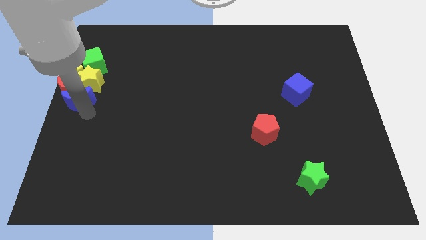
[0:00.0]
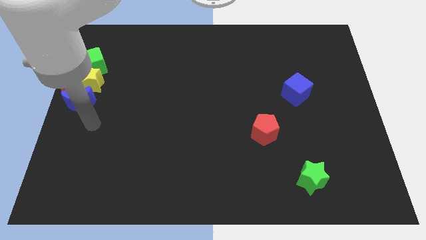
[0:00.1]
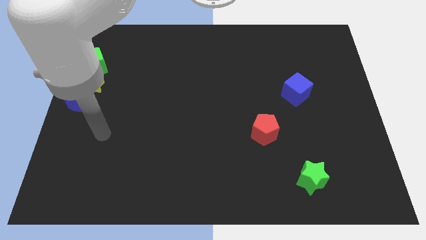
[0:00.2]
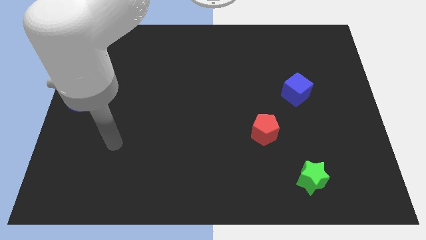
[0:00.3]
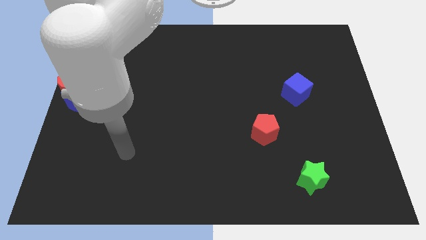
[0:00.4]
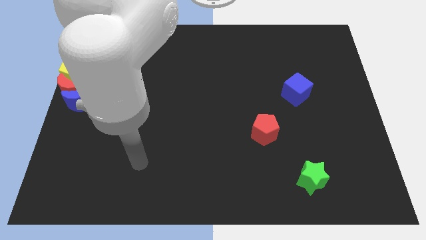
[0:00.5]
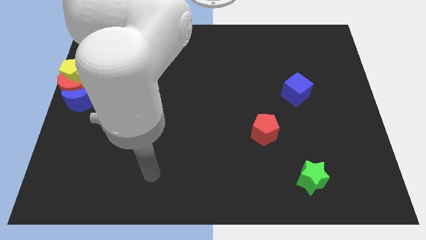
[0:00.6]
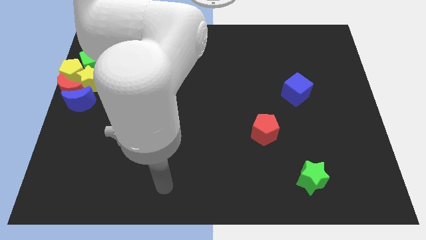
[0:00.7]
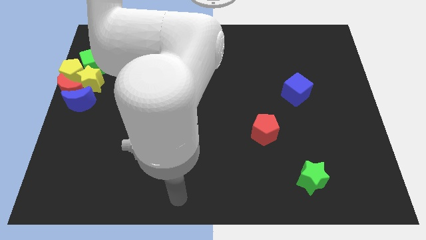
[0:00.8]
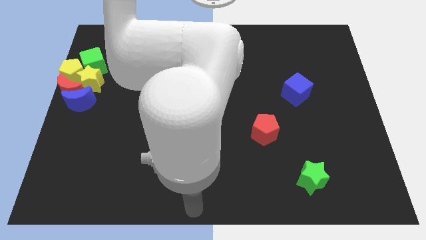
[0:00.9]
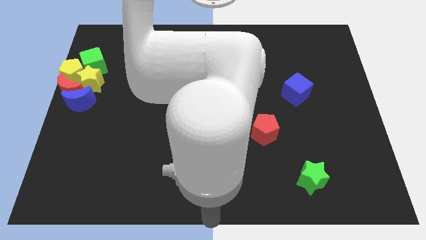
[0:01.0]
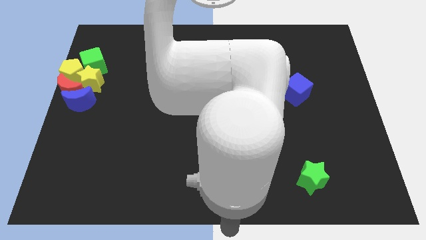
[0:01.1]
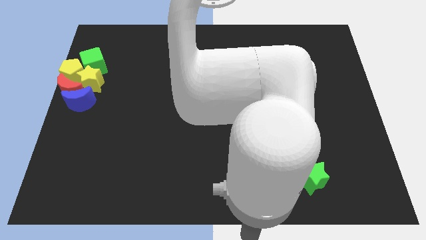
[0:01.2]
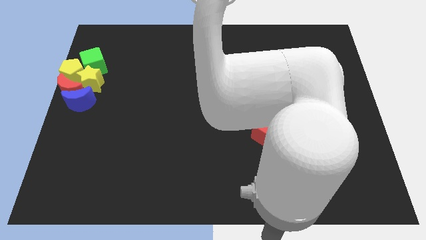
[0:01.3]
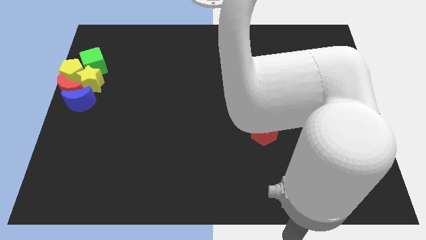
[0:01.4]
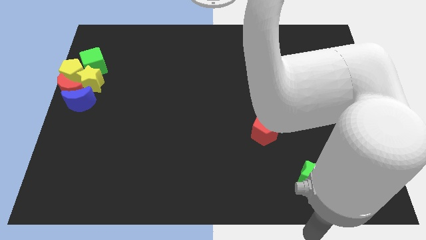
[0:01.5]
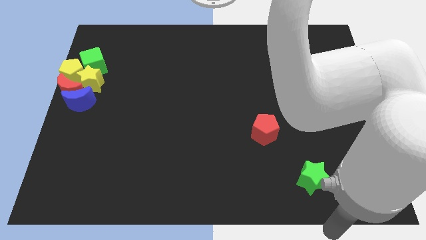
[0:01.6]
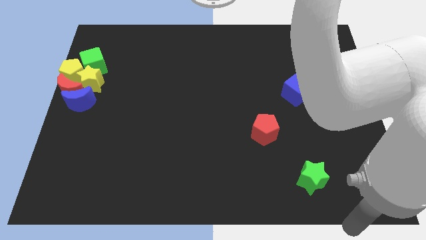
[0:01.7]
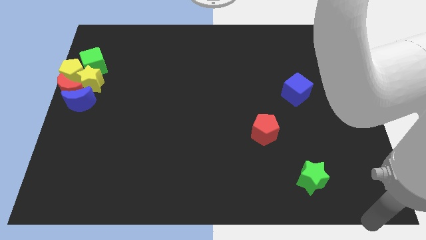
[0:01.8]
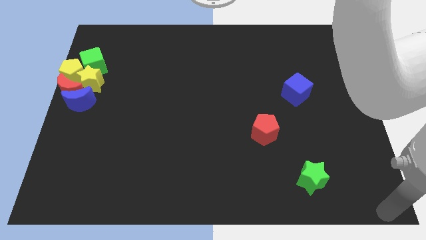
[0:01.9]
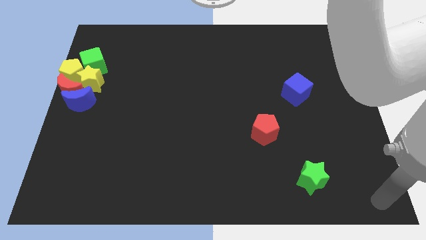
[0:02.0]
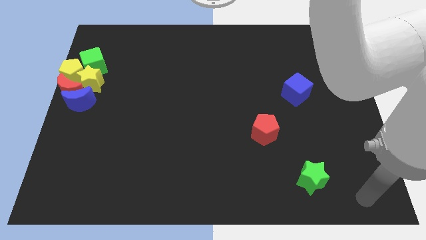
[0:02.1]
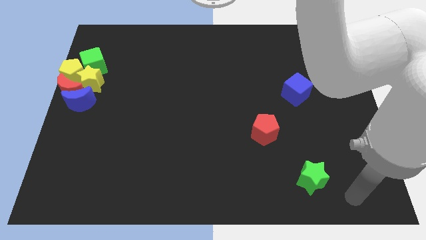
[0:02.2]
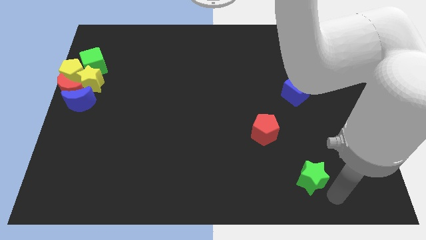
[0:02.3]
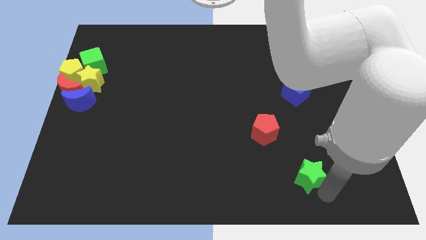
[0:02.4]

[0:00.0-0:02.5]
move your arm away from the blue moon

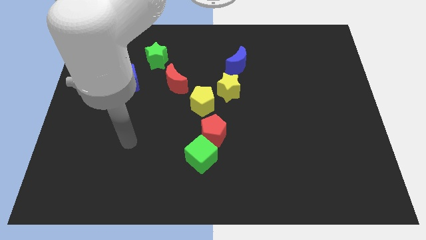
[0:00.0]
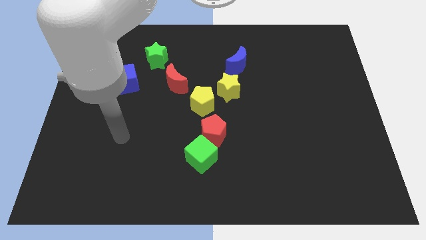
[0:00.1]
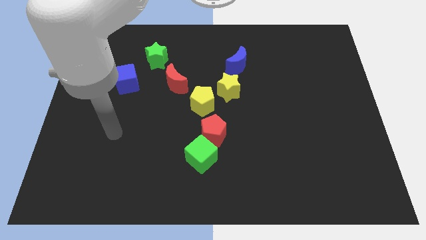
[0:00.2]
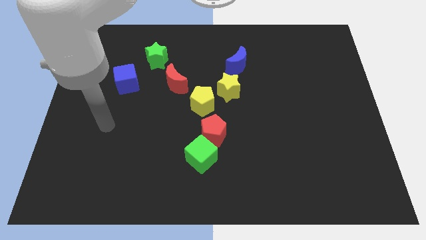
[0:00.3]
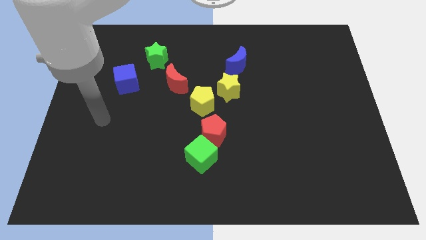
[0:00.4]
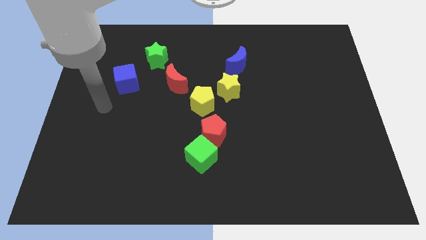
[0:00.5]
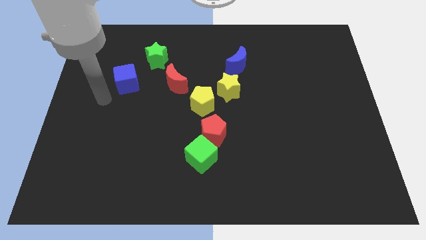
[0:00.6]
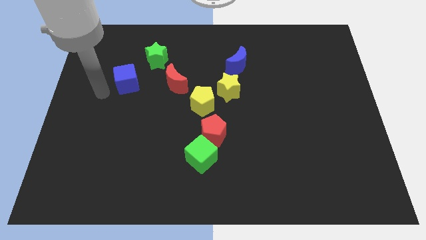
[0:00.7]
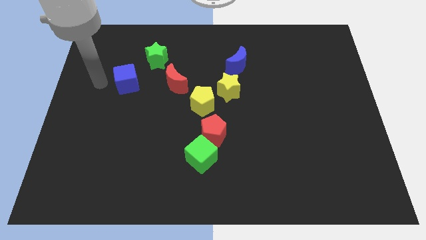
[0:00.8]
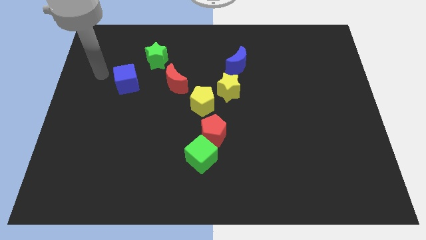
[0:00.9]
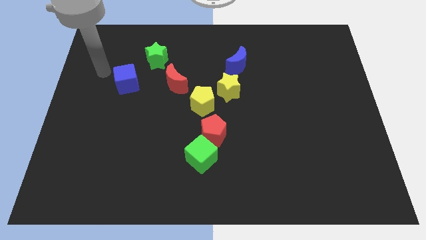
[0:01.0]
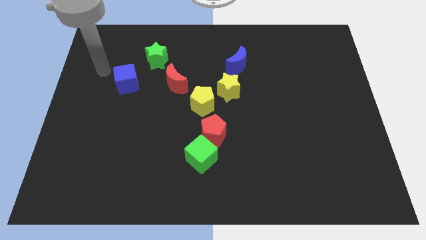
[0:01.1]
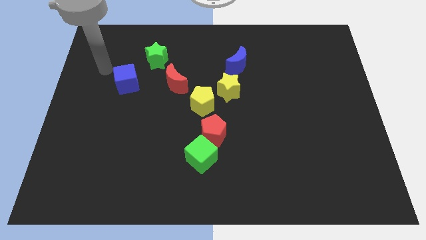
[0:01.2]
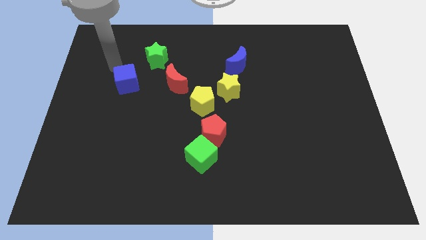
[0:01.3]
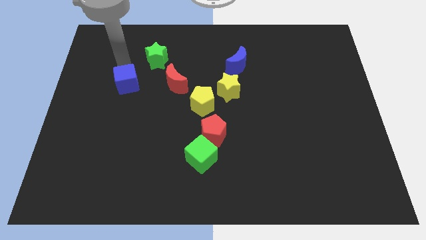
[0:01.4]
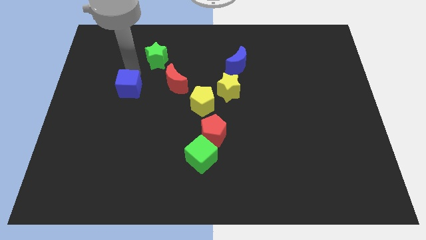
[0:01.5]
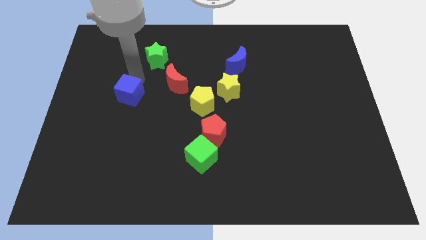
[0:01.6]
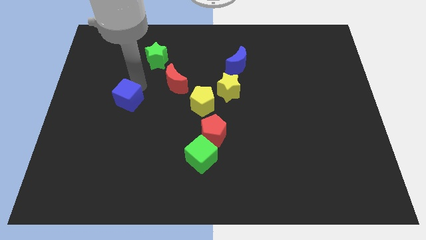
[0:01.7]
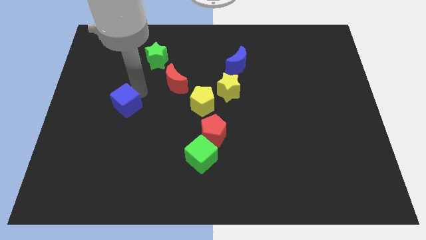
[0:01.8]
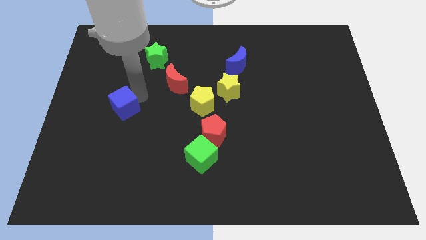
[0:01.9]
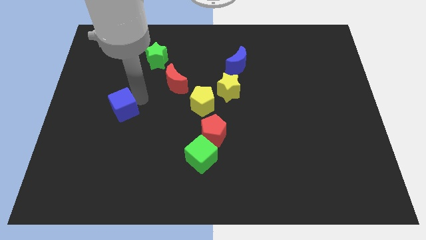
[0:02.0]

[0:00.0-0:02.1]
move the blue cube towards the bottom side

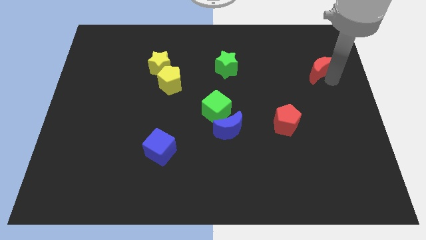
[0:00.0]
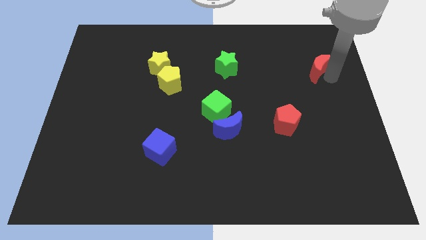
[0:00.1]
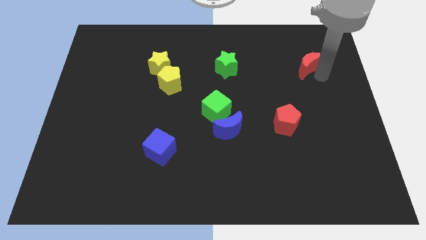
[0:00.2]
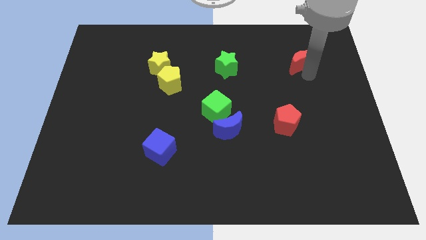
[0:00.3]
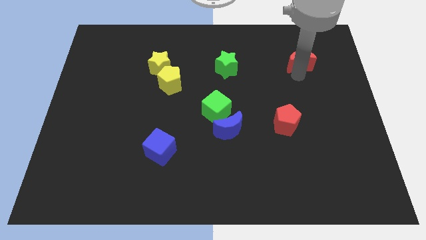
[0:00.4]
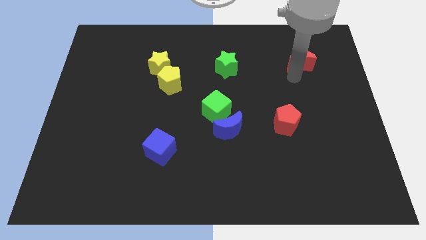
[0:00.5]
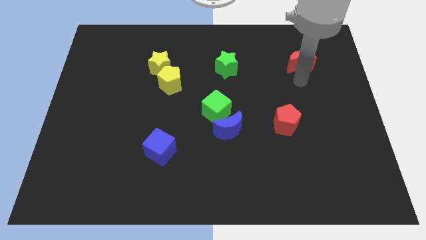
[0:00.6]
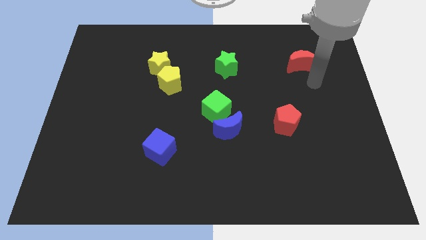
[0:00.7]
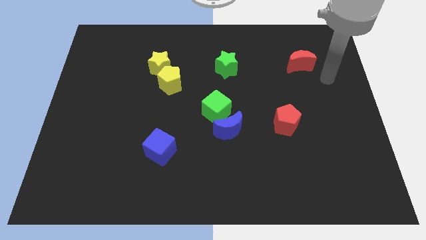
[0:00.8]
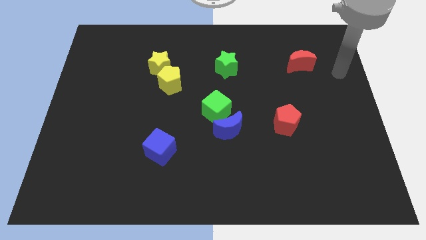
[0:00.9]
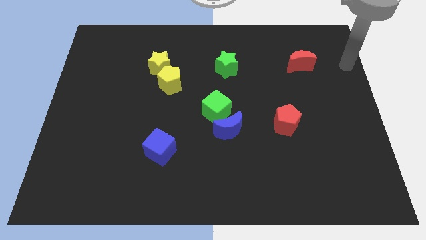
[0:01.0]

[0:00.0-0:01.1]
move red moon slightly up

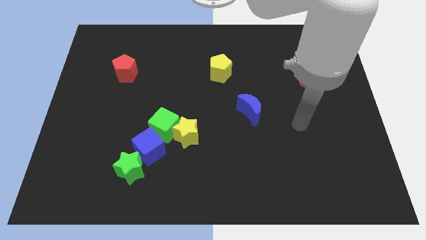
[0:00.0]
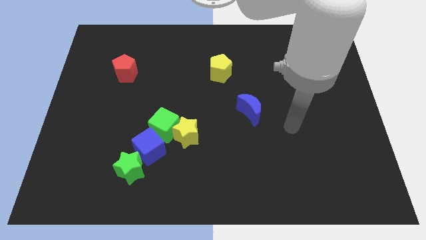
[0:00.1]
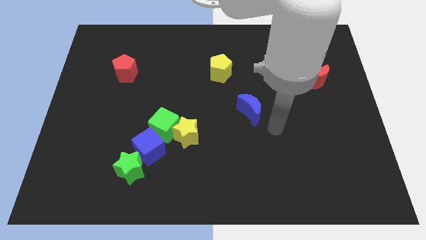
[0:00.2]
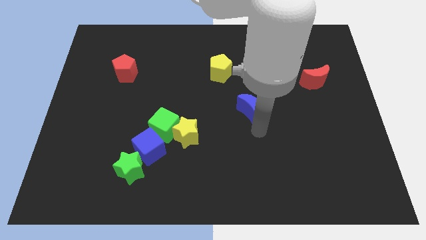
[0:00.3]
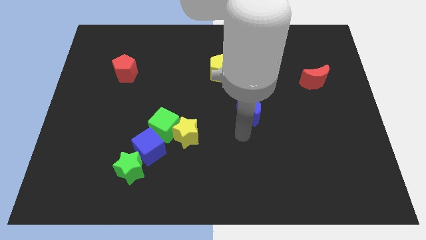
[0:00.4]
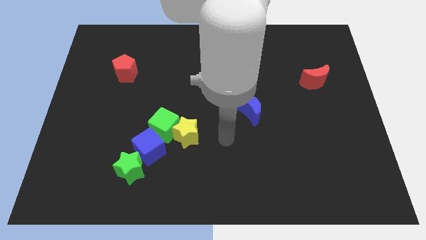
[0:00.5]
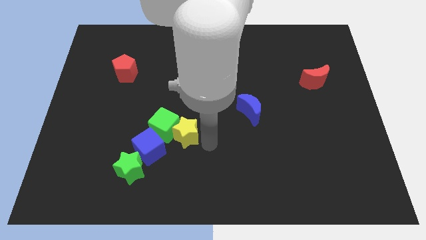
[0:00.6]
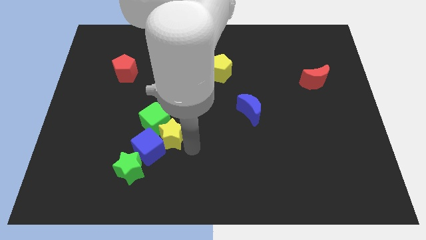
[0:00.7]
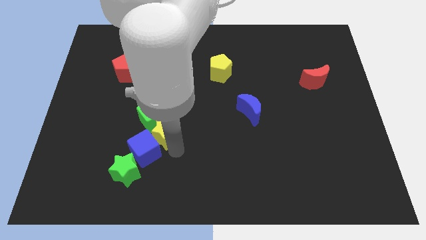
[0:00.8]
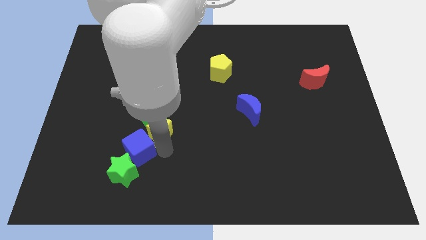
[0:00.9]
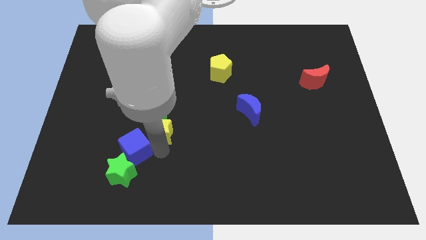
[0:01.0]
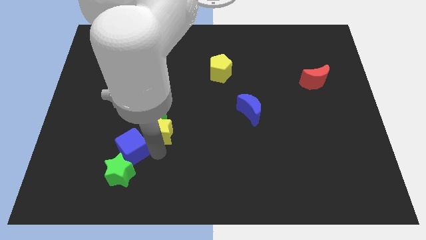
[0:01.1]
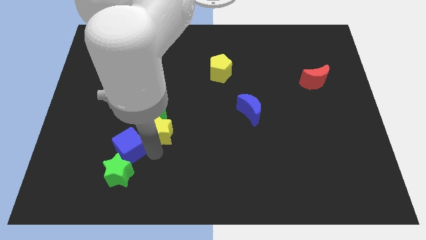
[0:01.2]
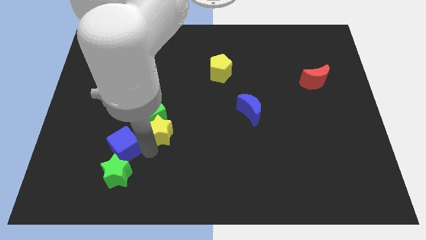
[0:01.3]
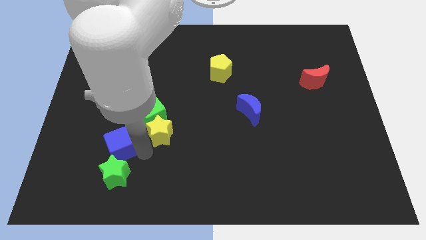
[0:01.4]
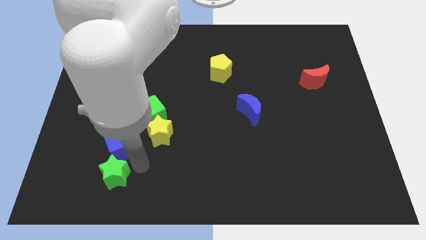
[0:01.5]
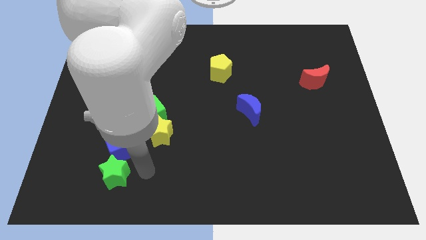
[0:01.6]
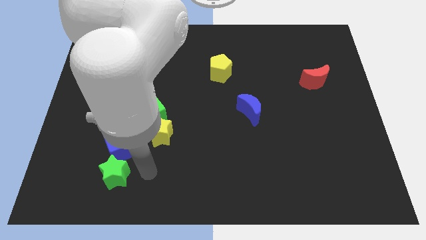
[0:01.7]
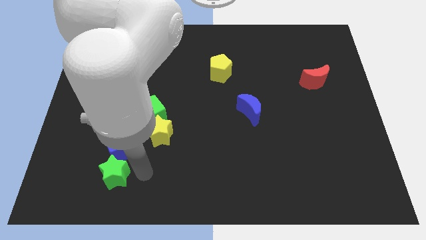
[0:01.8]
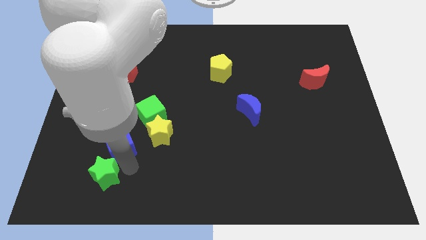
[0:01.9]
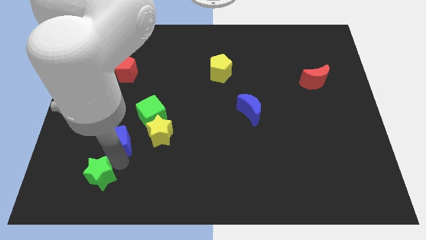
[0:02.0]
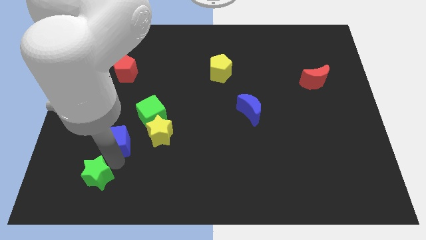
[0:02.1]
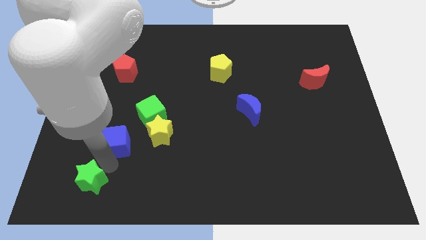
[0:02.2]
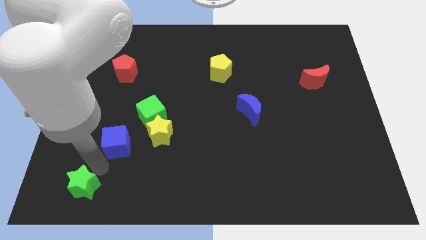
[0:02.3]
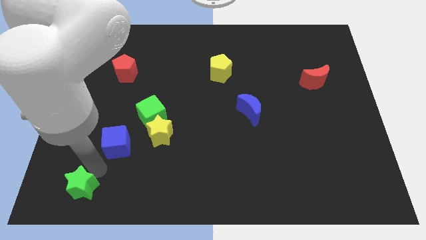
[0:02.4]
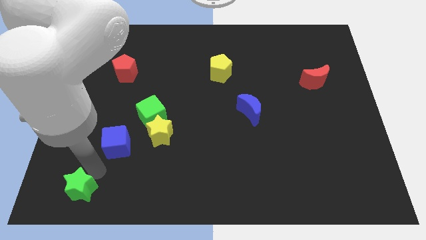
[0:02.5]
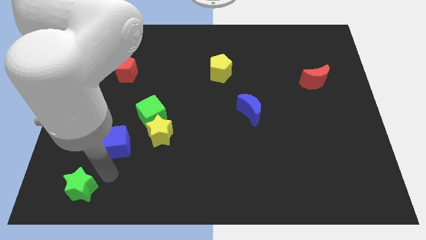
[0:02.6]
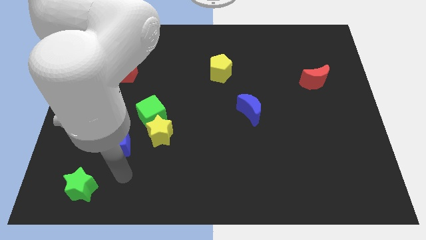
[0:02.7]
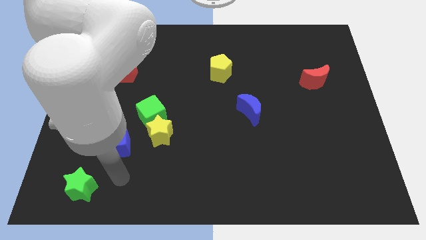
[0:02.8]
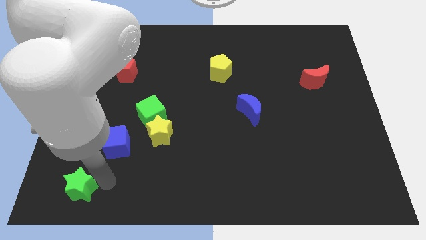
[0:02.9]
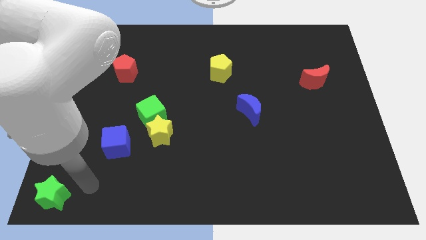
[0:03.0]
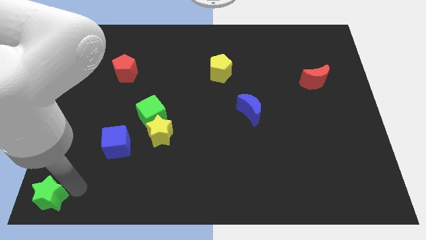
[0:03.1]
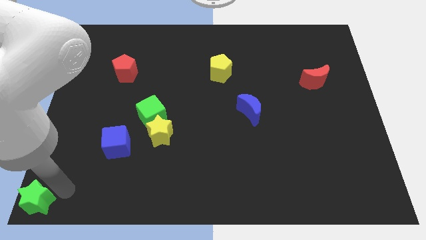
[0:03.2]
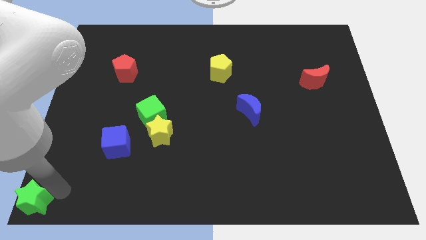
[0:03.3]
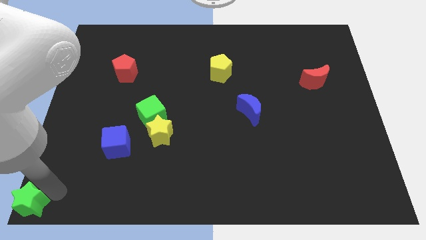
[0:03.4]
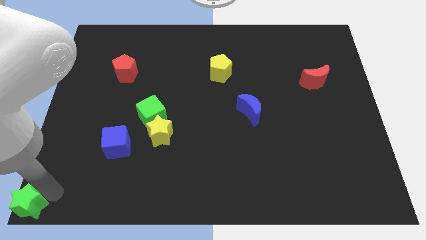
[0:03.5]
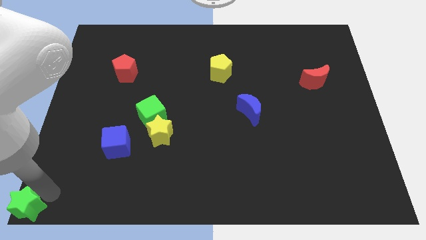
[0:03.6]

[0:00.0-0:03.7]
push green star to left bottom corner of the board
